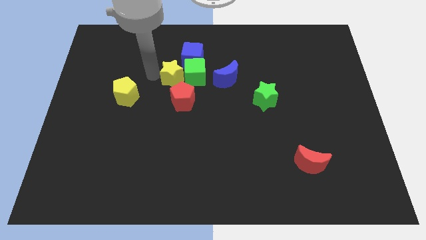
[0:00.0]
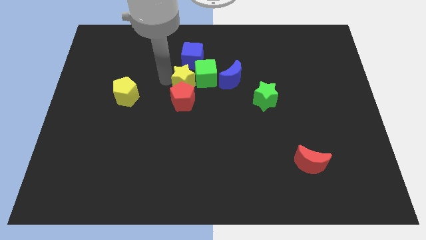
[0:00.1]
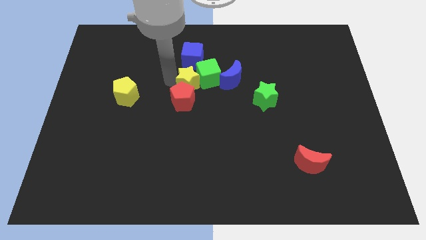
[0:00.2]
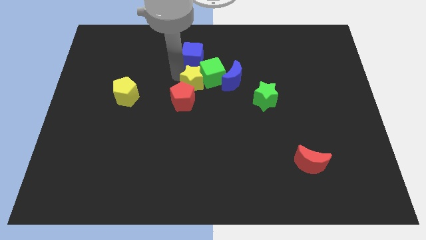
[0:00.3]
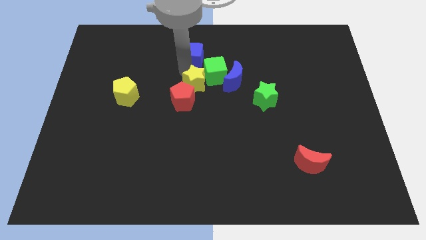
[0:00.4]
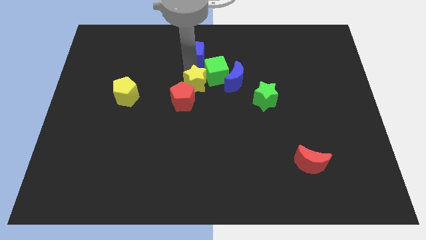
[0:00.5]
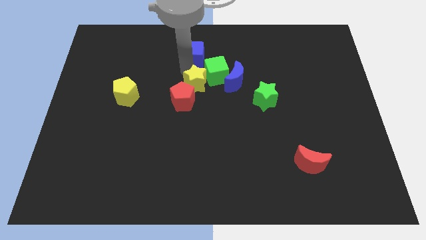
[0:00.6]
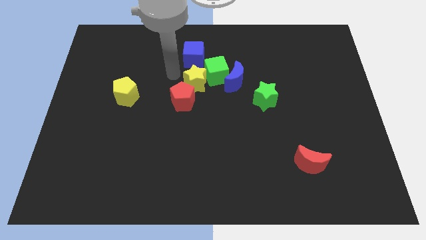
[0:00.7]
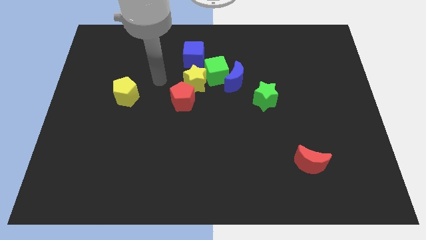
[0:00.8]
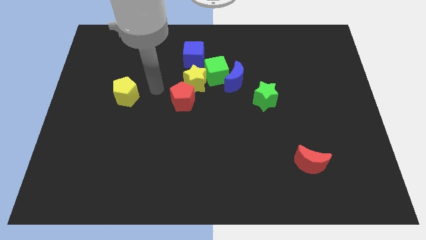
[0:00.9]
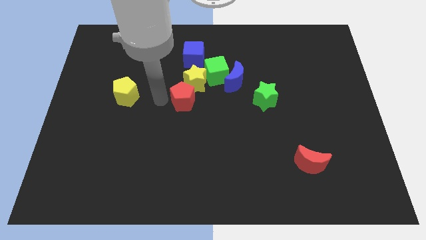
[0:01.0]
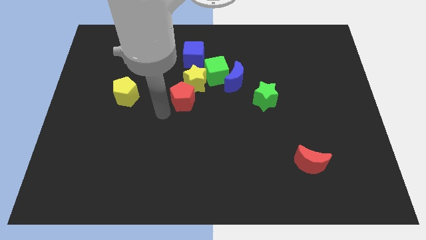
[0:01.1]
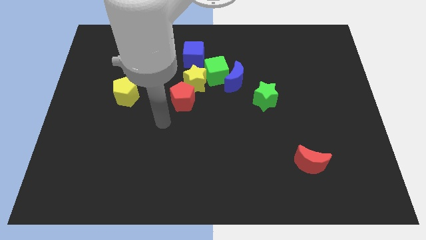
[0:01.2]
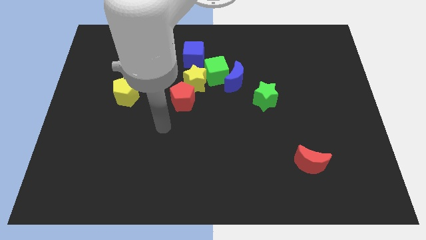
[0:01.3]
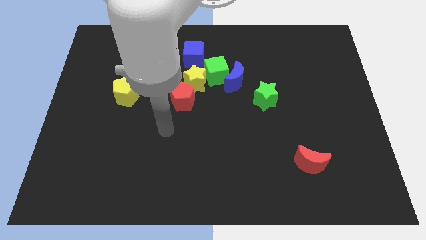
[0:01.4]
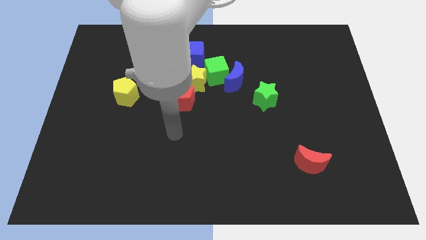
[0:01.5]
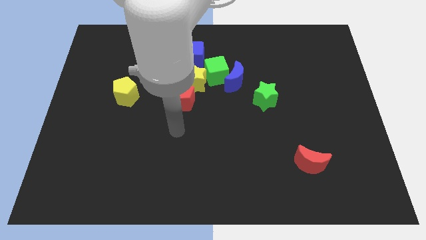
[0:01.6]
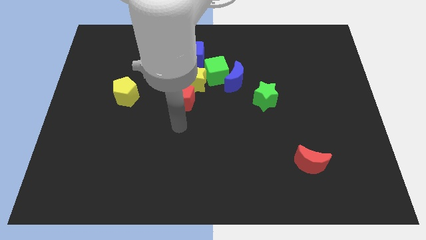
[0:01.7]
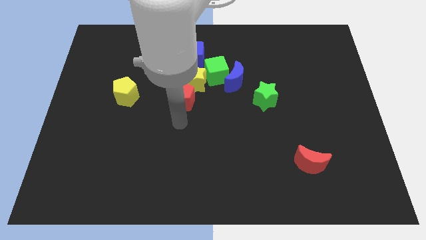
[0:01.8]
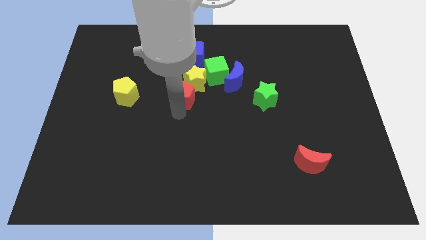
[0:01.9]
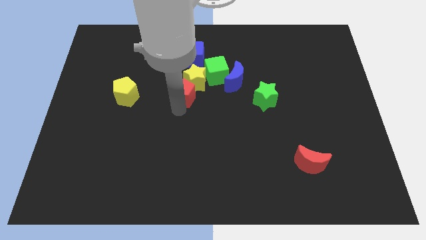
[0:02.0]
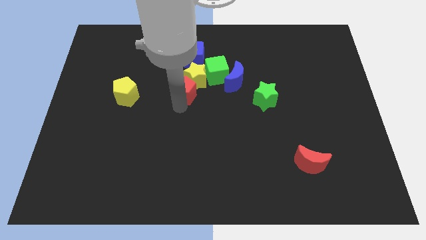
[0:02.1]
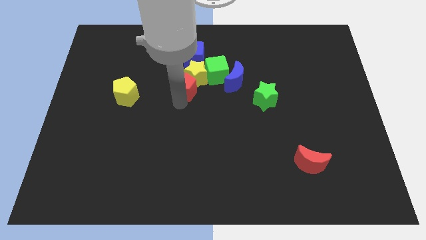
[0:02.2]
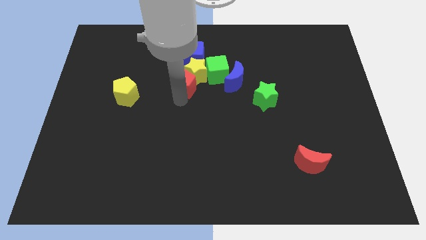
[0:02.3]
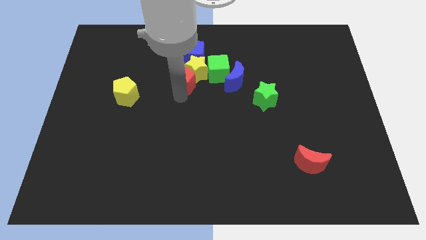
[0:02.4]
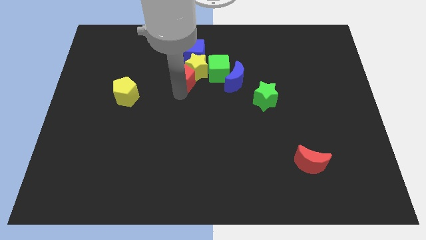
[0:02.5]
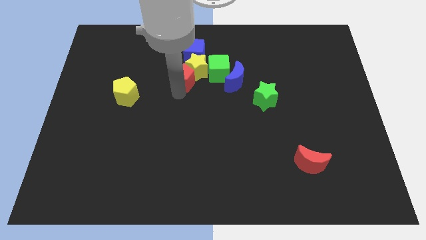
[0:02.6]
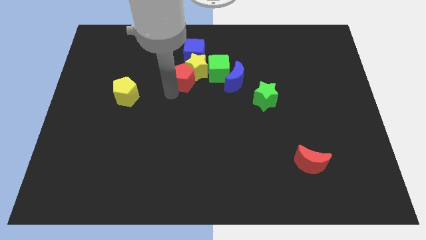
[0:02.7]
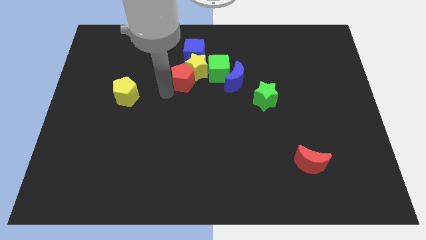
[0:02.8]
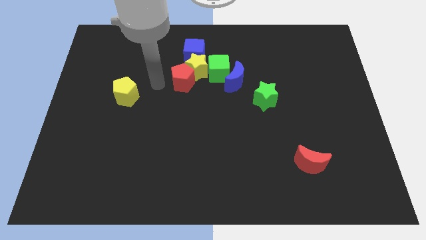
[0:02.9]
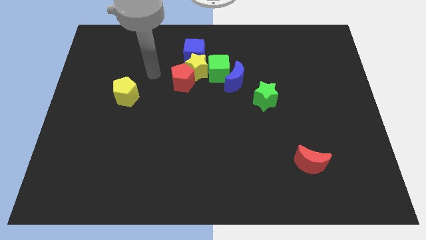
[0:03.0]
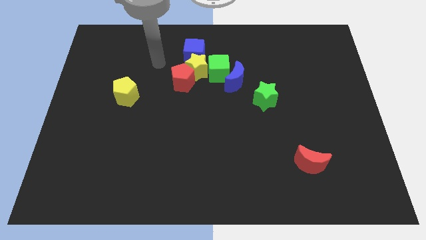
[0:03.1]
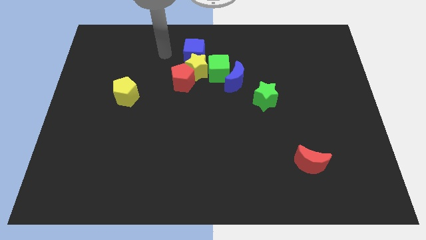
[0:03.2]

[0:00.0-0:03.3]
push the red pentagon into the yellow star

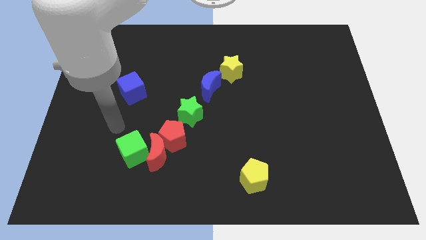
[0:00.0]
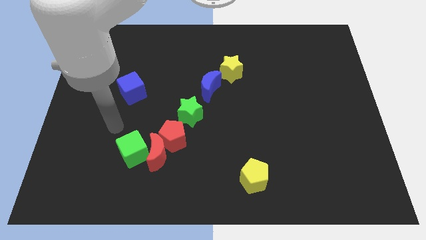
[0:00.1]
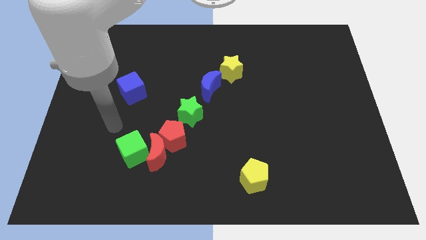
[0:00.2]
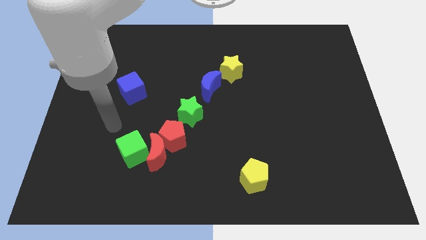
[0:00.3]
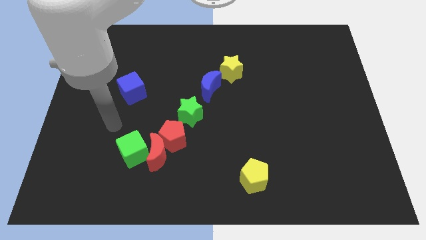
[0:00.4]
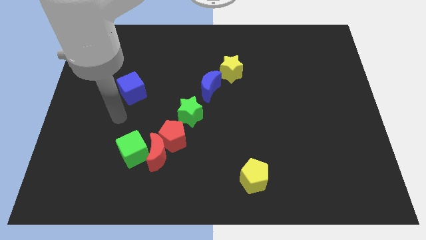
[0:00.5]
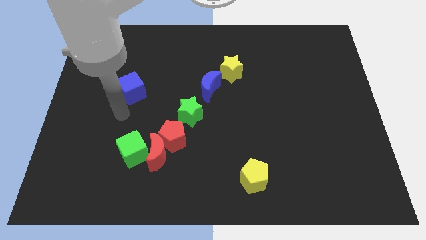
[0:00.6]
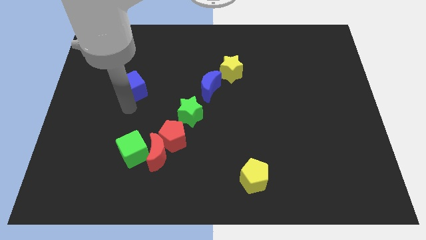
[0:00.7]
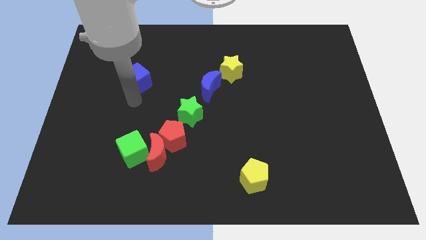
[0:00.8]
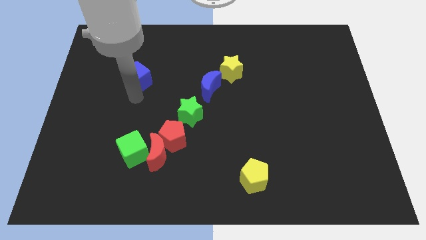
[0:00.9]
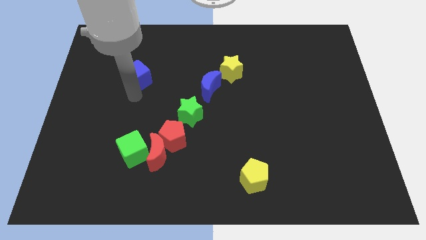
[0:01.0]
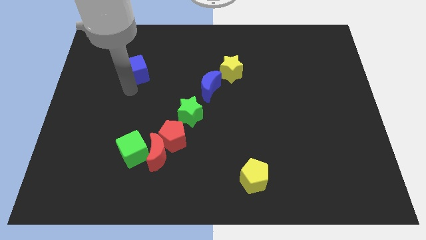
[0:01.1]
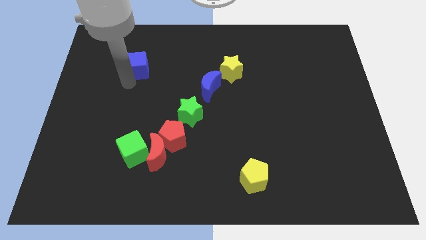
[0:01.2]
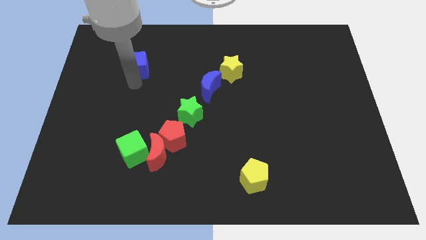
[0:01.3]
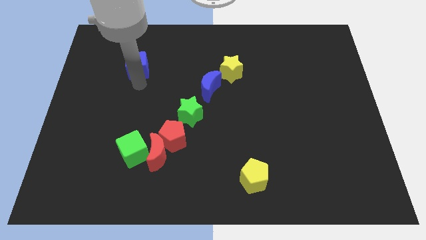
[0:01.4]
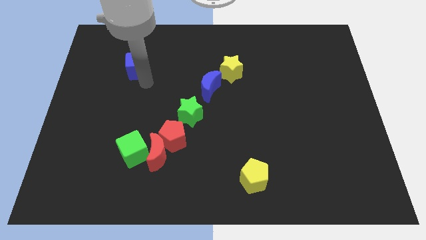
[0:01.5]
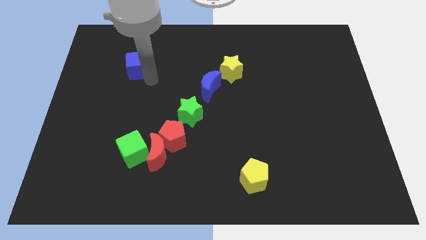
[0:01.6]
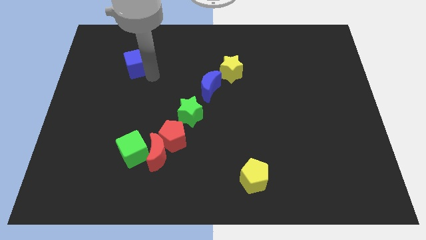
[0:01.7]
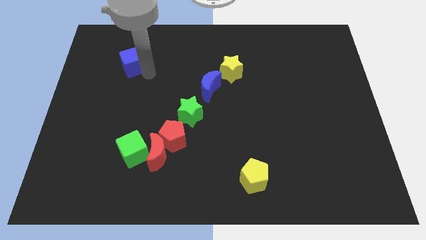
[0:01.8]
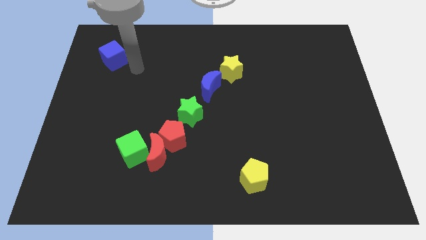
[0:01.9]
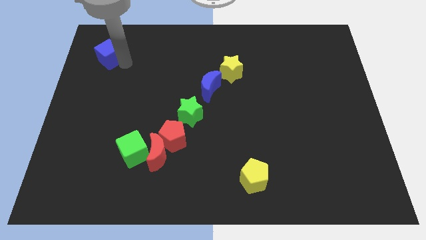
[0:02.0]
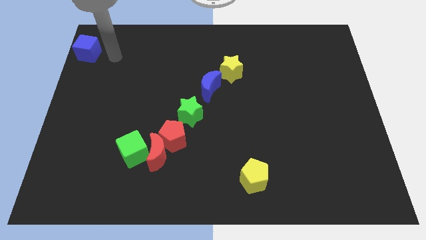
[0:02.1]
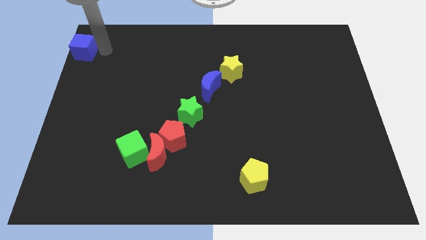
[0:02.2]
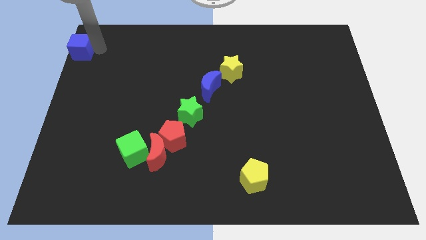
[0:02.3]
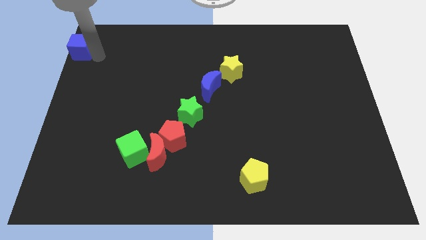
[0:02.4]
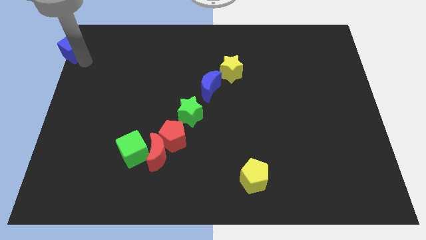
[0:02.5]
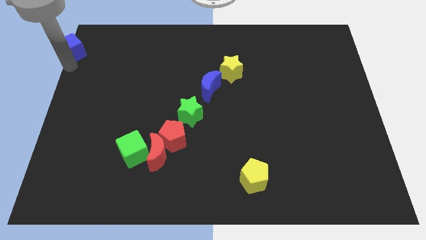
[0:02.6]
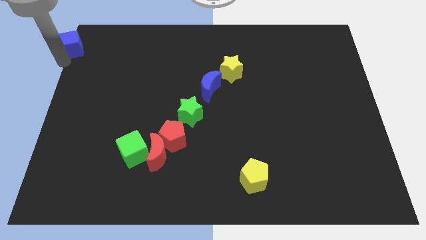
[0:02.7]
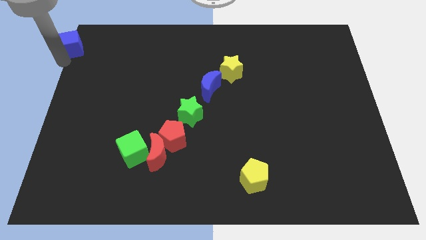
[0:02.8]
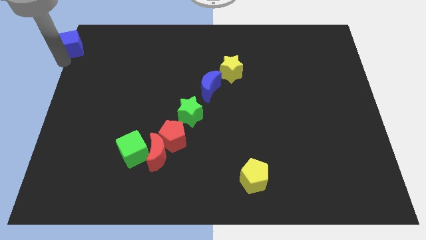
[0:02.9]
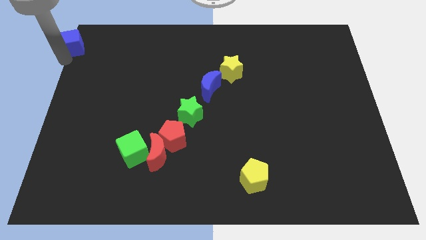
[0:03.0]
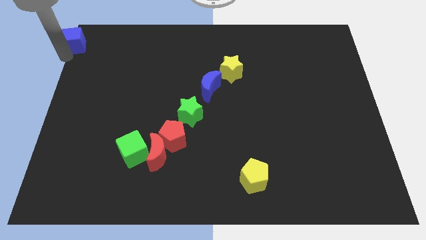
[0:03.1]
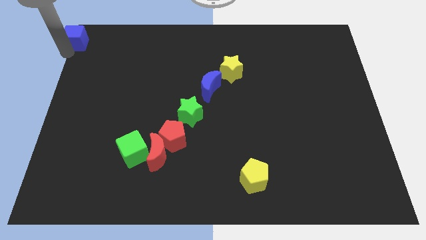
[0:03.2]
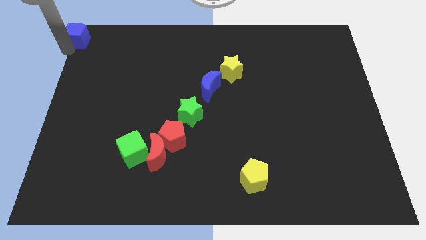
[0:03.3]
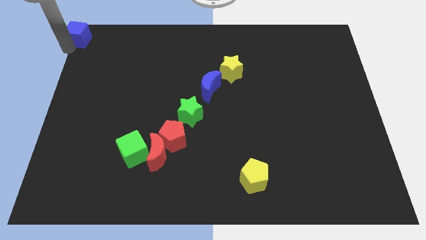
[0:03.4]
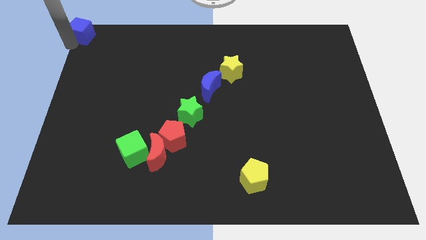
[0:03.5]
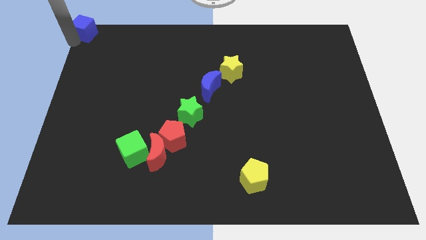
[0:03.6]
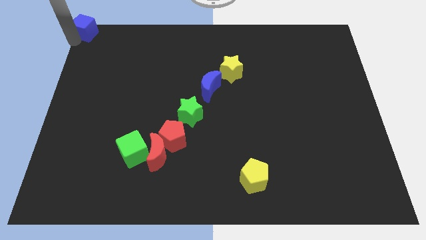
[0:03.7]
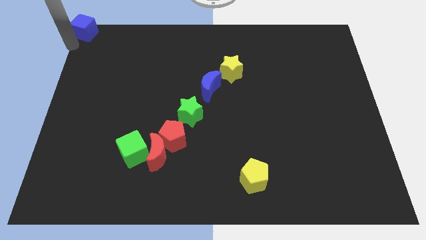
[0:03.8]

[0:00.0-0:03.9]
put the blue cube at the top left corner of the table

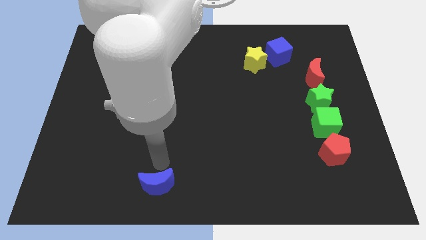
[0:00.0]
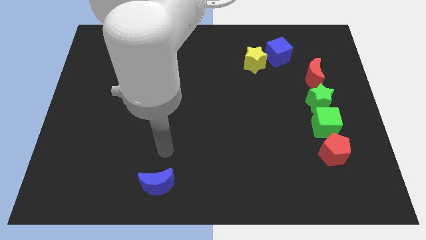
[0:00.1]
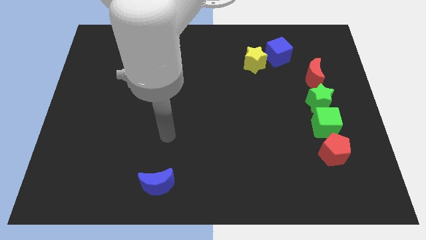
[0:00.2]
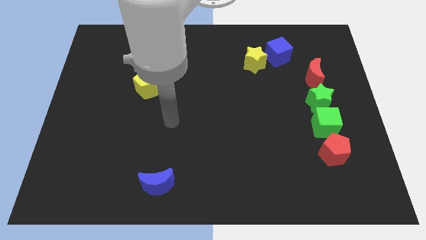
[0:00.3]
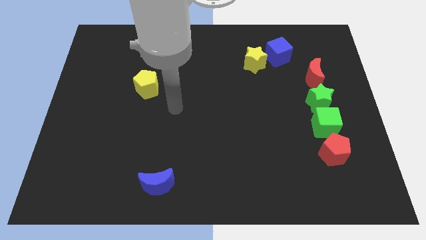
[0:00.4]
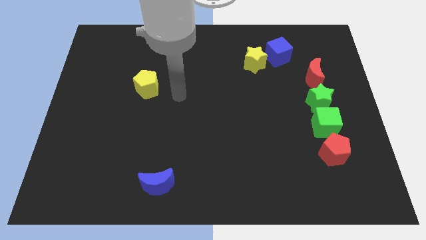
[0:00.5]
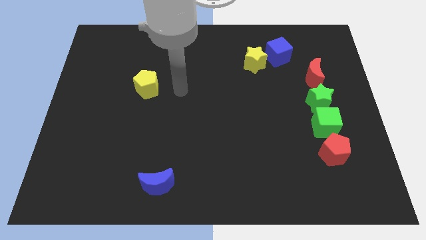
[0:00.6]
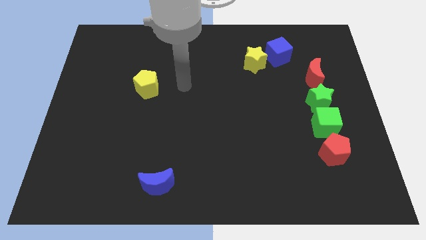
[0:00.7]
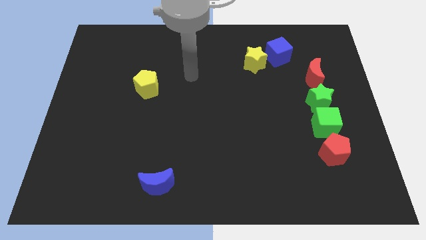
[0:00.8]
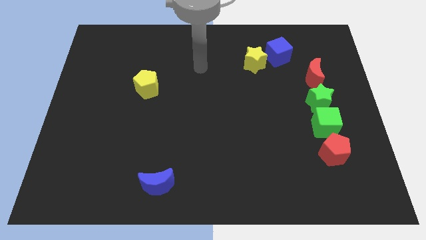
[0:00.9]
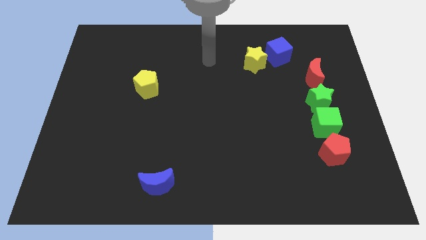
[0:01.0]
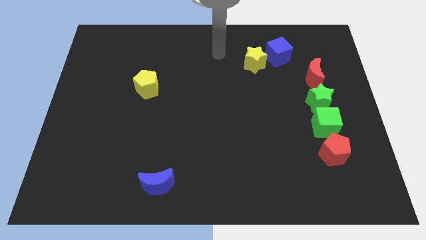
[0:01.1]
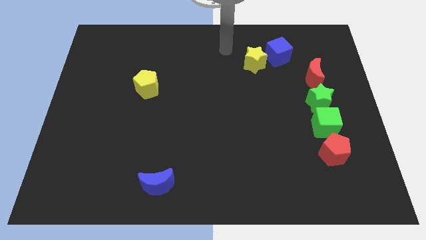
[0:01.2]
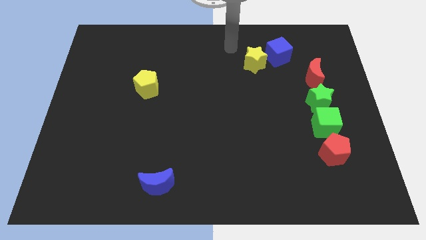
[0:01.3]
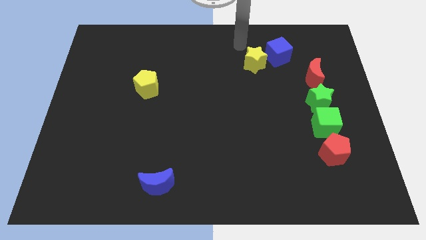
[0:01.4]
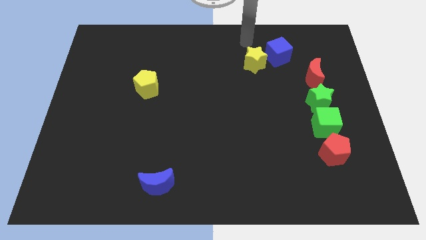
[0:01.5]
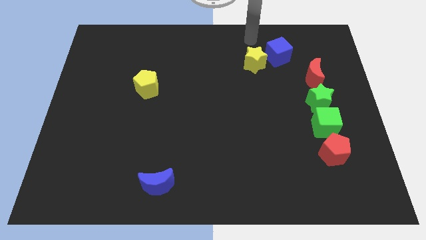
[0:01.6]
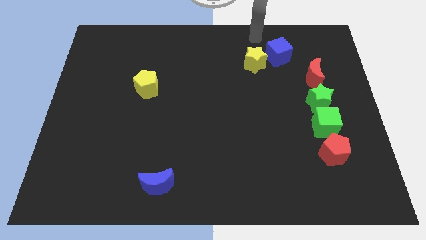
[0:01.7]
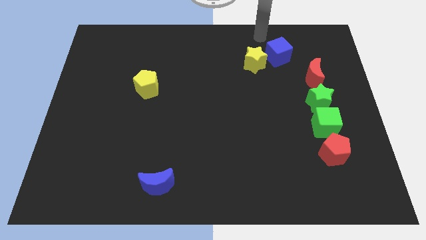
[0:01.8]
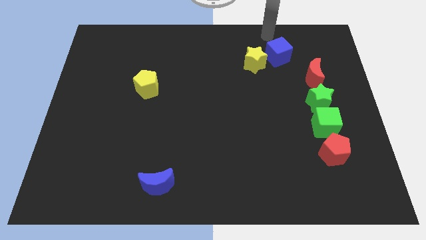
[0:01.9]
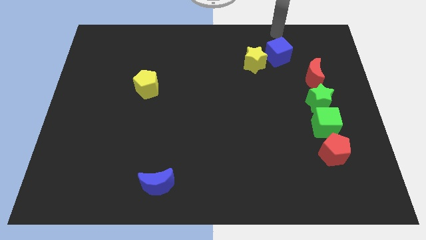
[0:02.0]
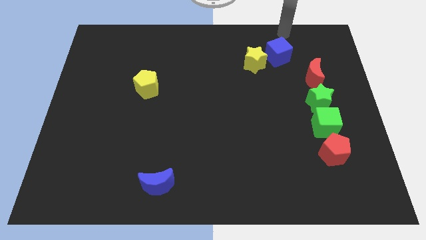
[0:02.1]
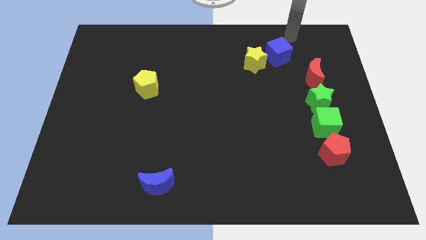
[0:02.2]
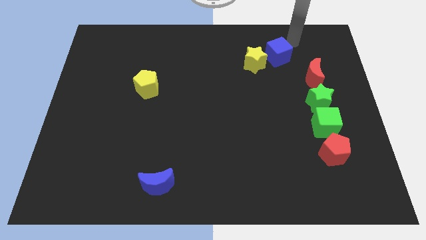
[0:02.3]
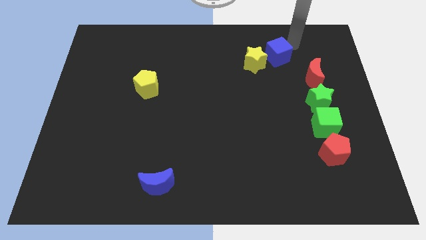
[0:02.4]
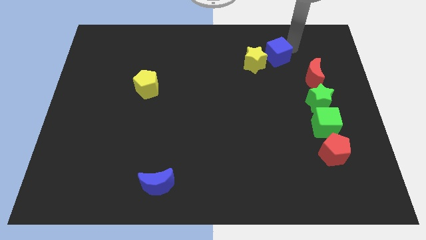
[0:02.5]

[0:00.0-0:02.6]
put your arm at the top right side of blue cube
